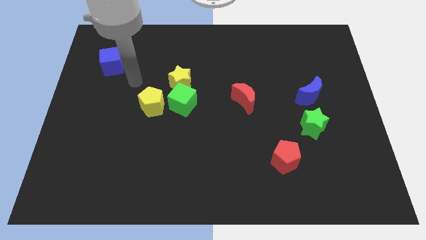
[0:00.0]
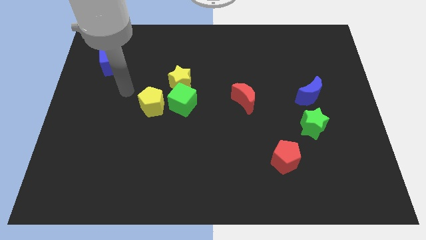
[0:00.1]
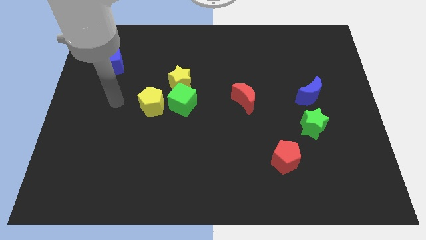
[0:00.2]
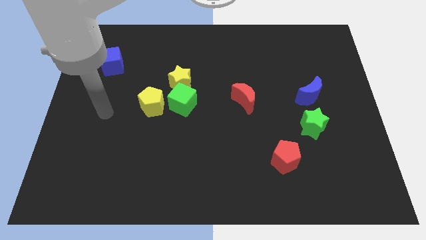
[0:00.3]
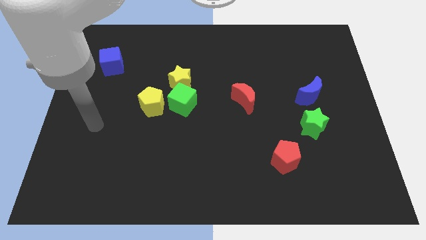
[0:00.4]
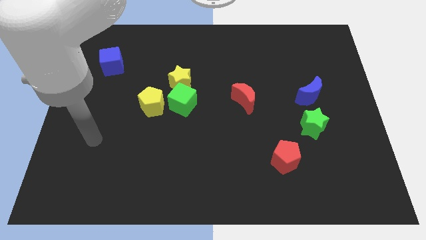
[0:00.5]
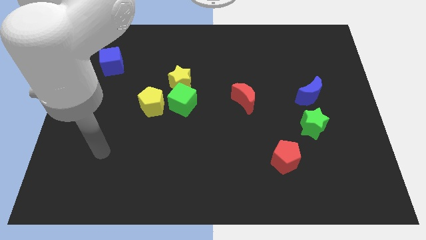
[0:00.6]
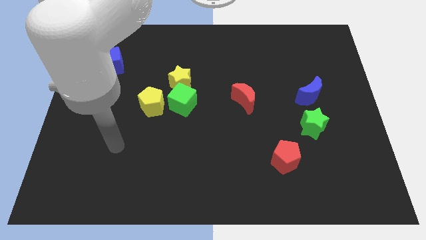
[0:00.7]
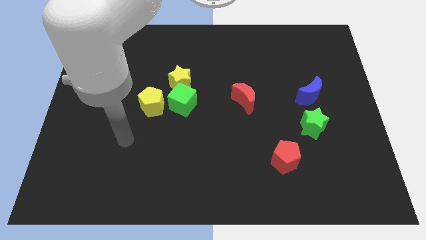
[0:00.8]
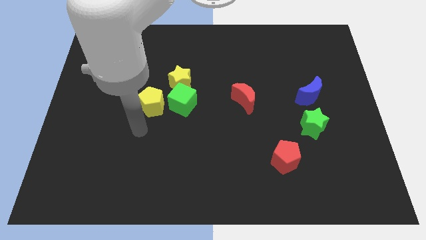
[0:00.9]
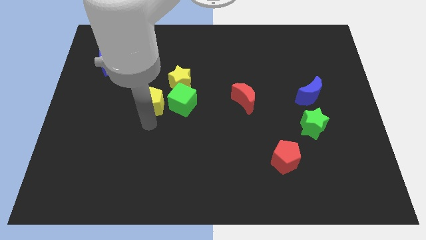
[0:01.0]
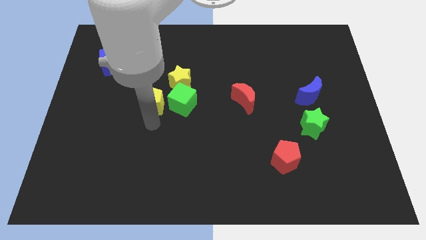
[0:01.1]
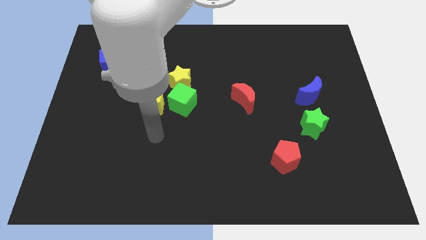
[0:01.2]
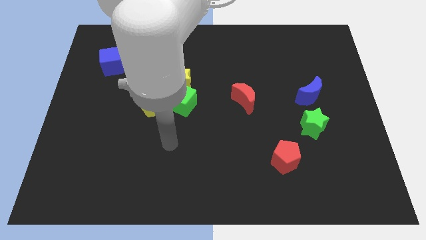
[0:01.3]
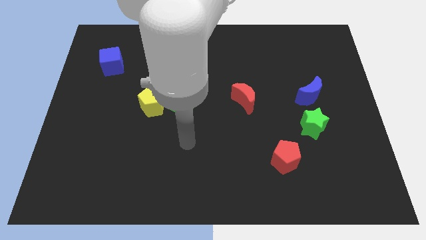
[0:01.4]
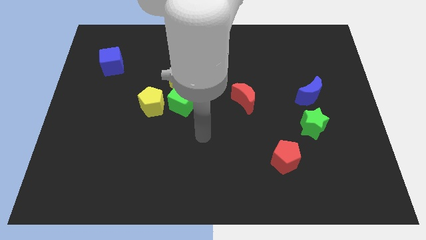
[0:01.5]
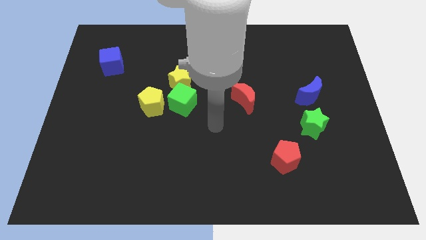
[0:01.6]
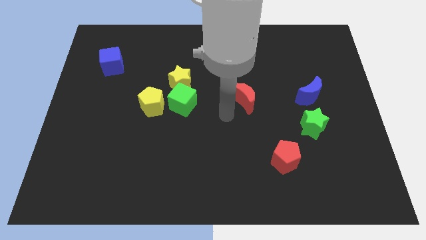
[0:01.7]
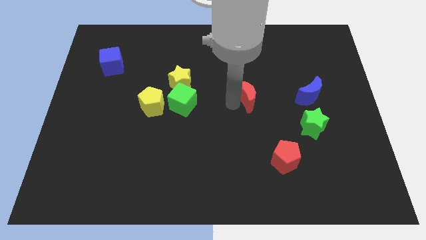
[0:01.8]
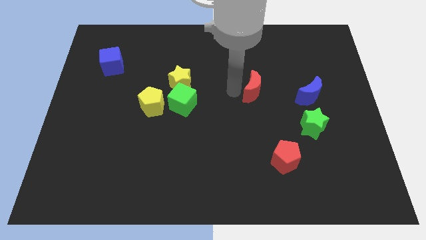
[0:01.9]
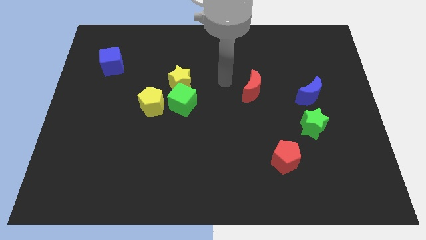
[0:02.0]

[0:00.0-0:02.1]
move the red moon slightly towards the right

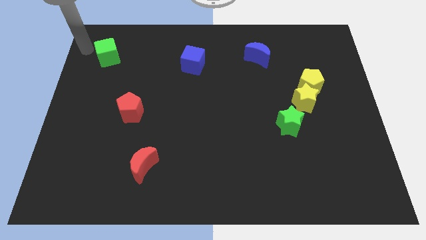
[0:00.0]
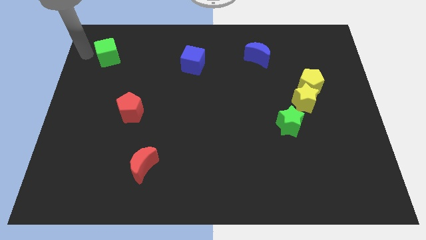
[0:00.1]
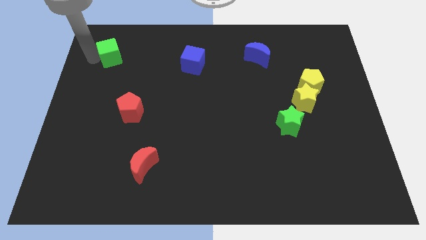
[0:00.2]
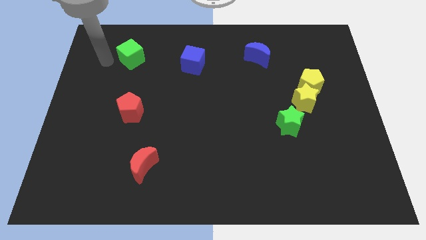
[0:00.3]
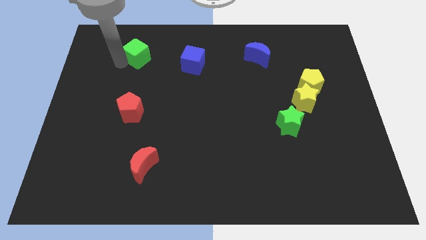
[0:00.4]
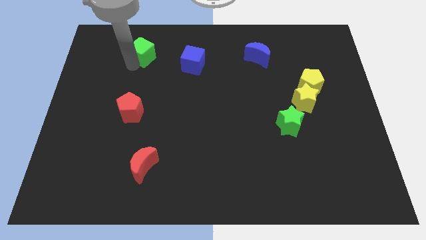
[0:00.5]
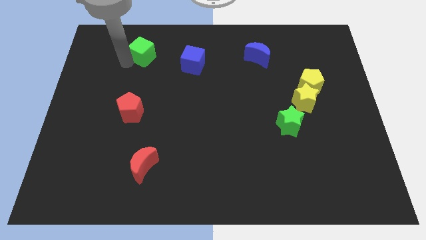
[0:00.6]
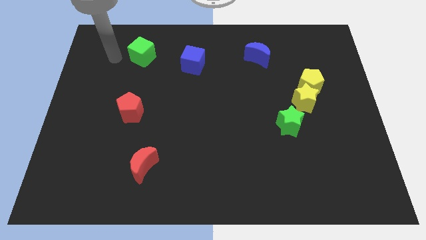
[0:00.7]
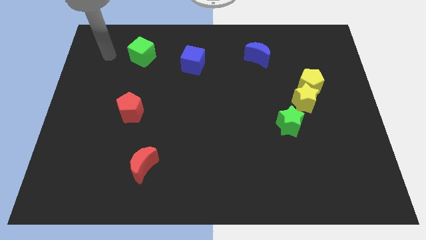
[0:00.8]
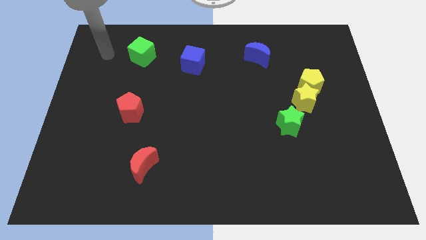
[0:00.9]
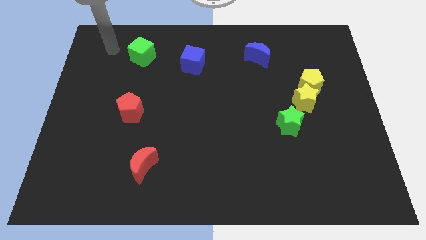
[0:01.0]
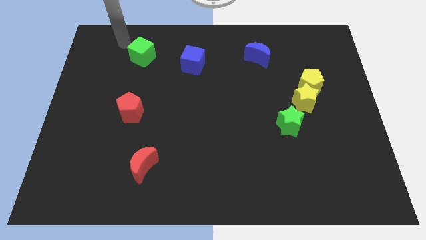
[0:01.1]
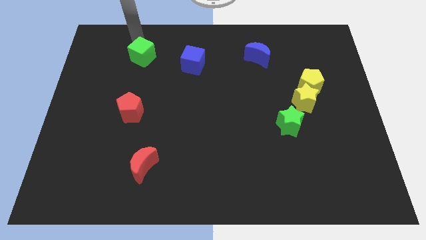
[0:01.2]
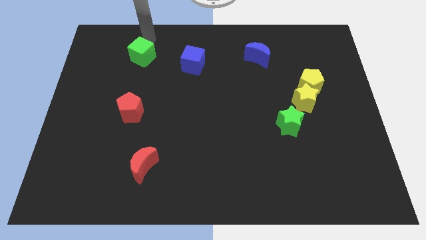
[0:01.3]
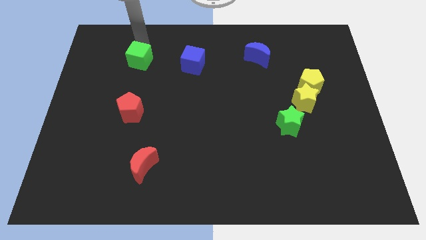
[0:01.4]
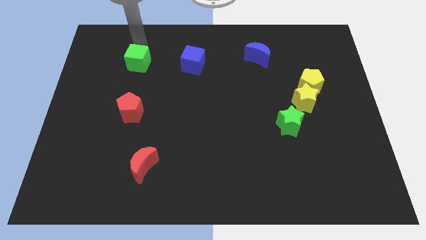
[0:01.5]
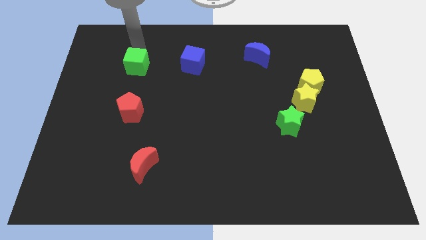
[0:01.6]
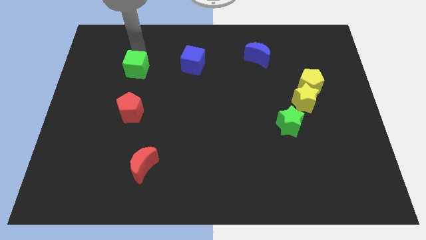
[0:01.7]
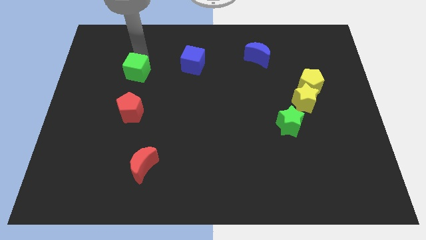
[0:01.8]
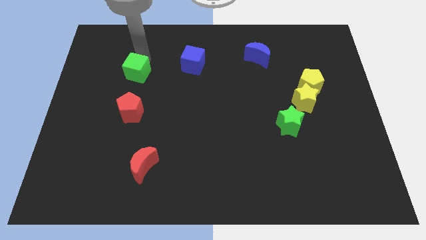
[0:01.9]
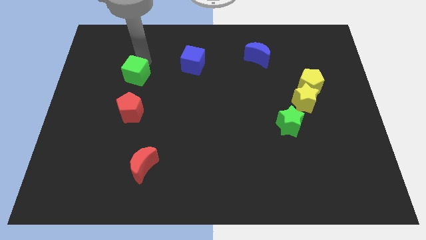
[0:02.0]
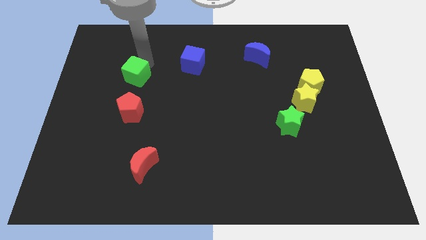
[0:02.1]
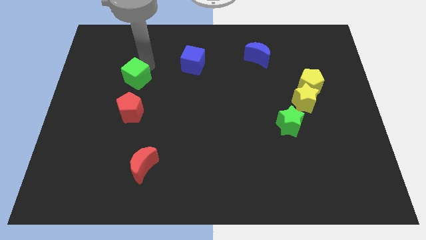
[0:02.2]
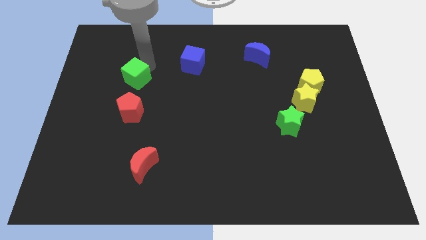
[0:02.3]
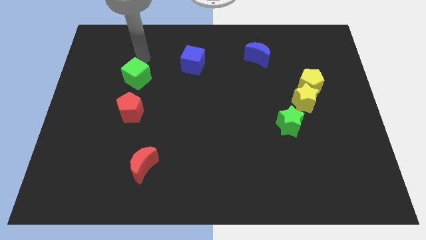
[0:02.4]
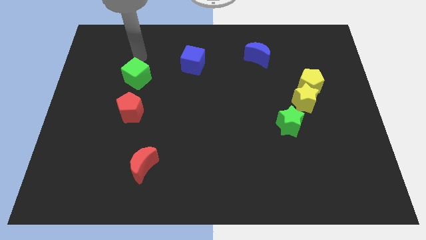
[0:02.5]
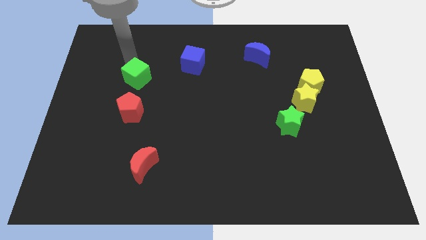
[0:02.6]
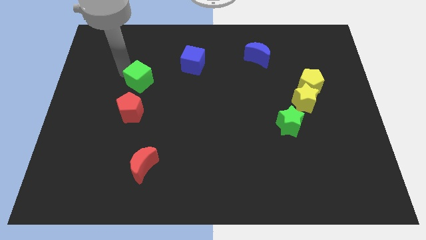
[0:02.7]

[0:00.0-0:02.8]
push the green cube to the top side of the red pentagon

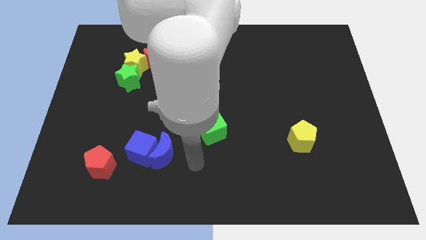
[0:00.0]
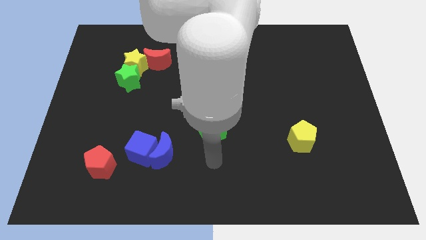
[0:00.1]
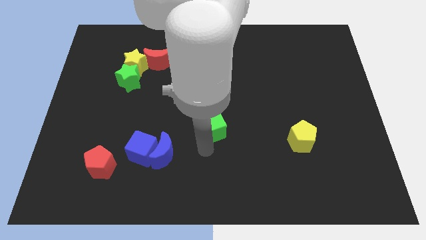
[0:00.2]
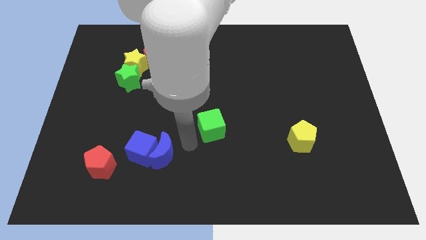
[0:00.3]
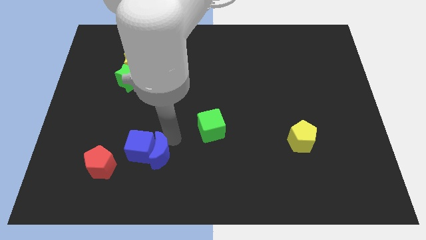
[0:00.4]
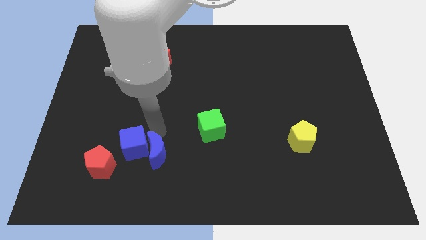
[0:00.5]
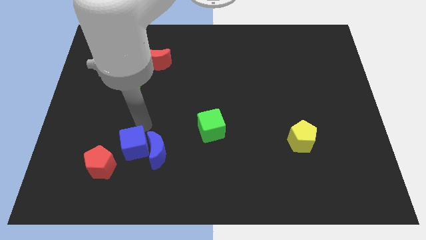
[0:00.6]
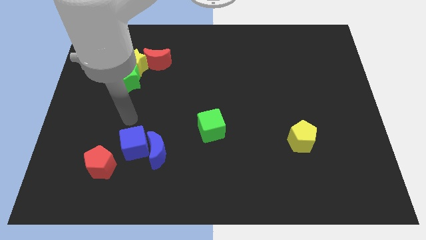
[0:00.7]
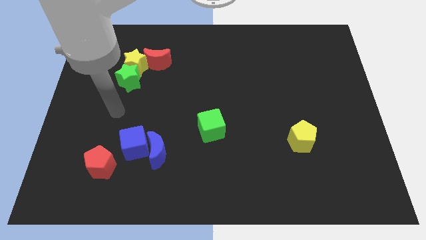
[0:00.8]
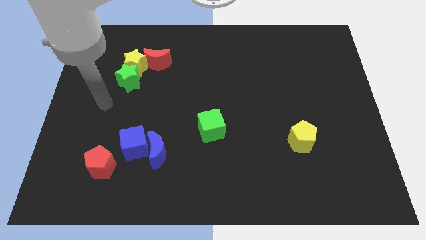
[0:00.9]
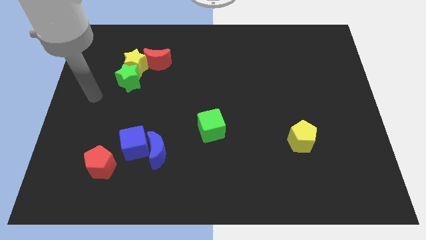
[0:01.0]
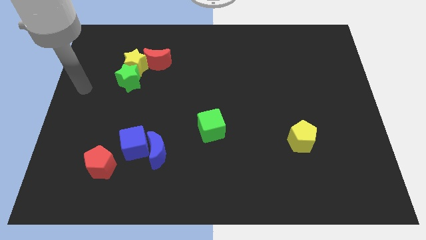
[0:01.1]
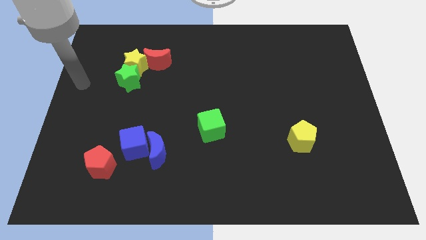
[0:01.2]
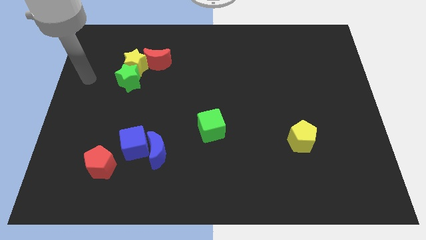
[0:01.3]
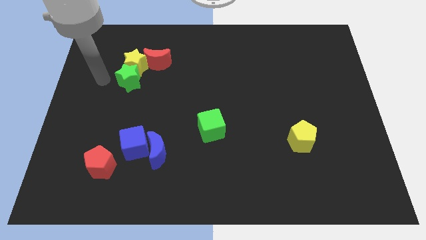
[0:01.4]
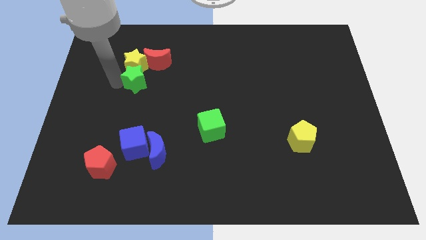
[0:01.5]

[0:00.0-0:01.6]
move arm close to the green star

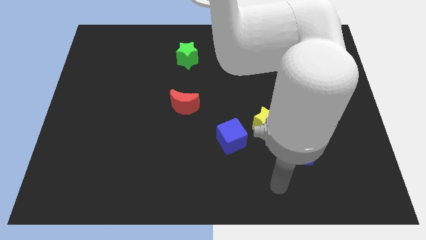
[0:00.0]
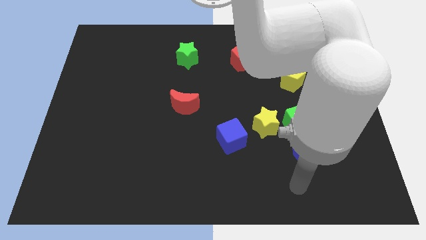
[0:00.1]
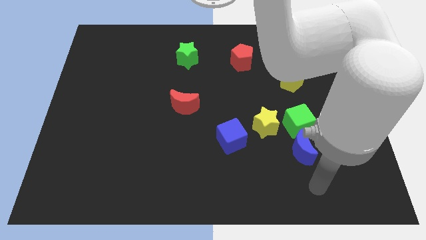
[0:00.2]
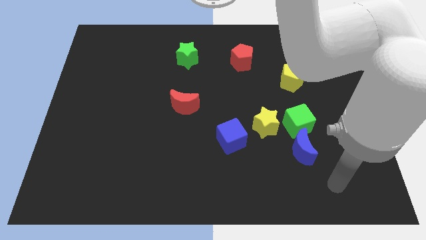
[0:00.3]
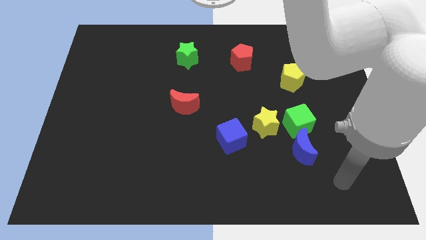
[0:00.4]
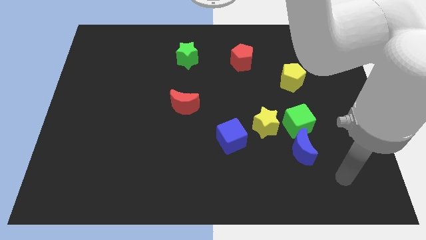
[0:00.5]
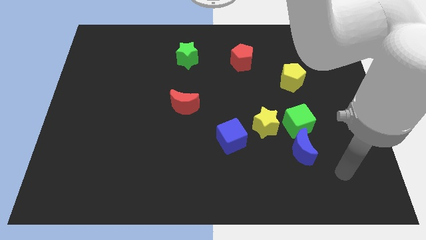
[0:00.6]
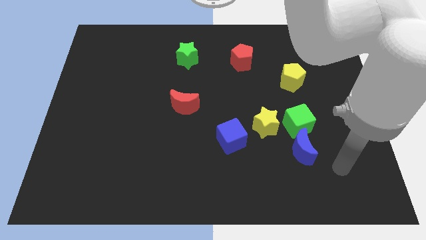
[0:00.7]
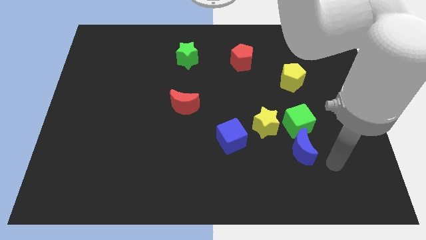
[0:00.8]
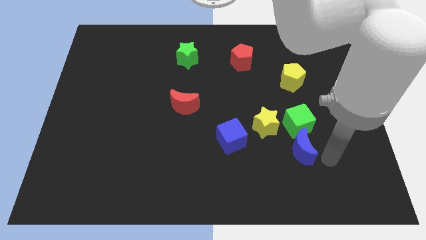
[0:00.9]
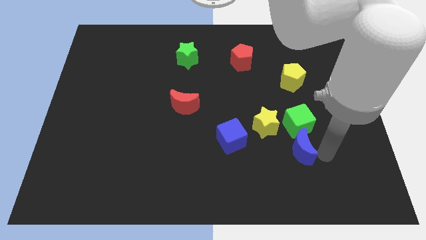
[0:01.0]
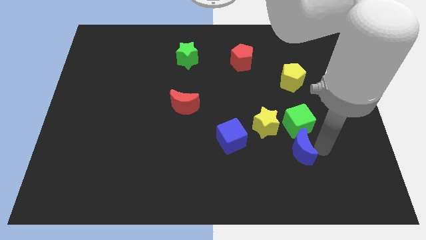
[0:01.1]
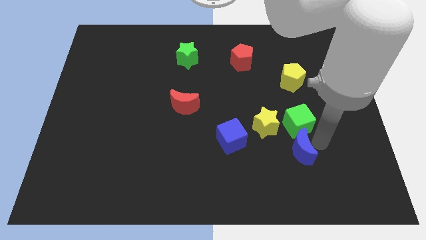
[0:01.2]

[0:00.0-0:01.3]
move yourself to the right side of the blue moon

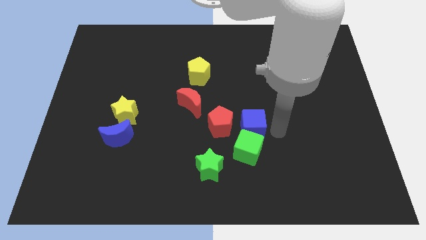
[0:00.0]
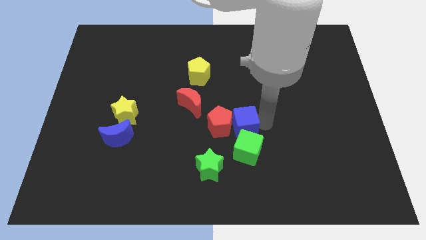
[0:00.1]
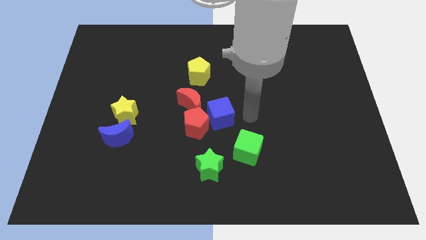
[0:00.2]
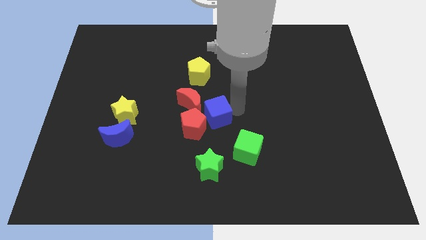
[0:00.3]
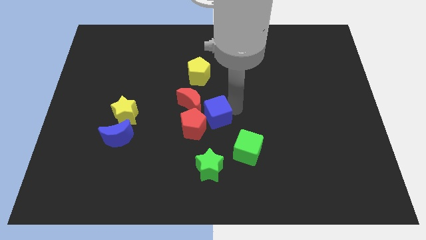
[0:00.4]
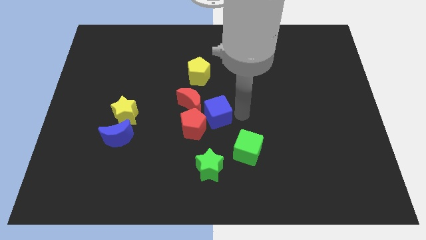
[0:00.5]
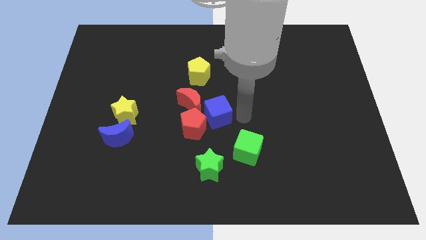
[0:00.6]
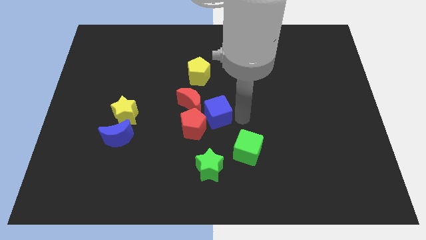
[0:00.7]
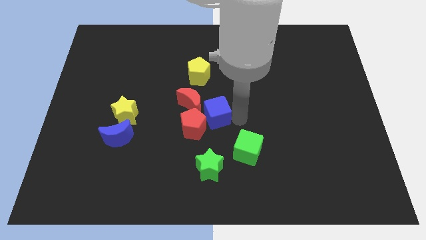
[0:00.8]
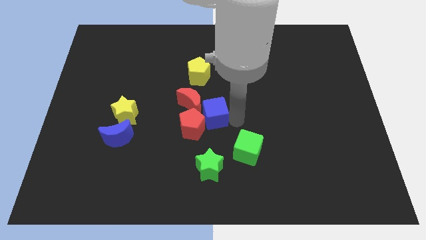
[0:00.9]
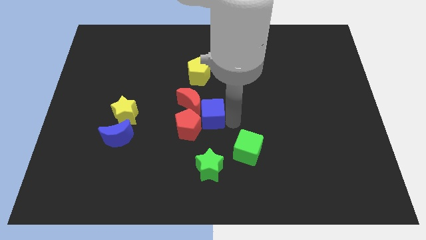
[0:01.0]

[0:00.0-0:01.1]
push the red pentagon using the blue cube
